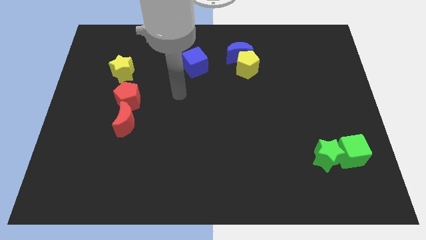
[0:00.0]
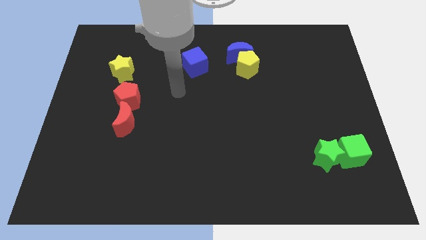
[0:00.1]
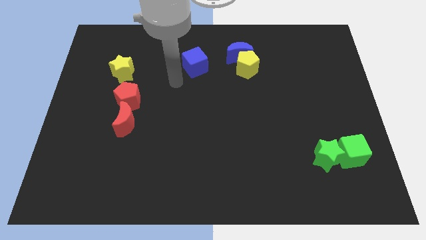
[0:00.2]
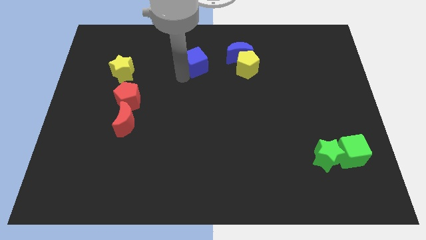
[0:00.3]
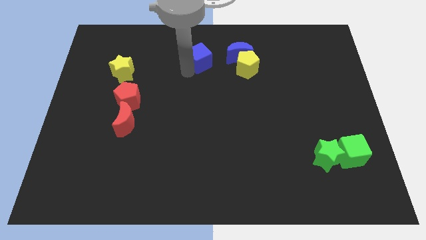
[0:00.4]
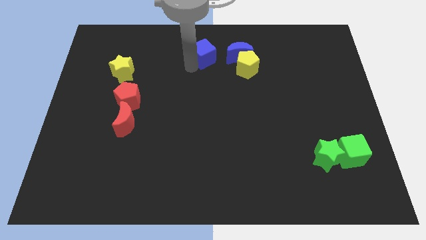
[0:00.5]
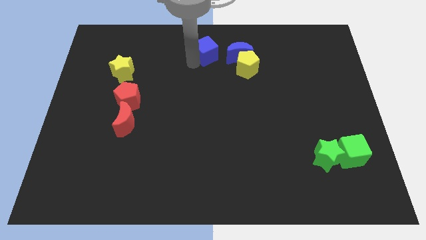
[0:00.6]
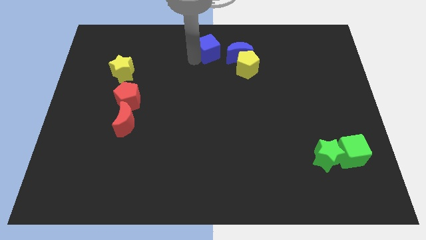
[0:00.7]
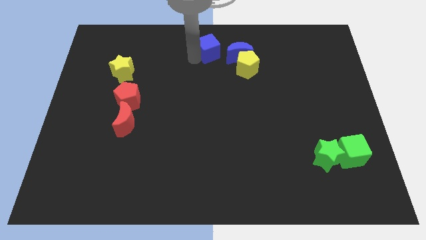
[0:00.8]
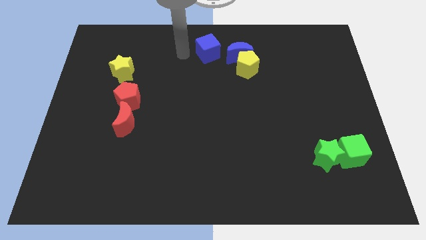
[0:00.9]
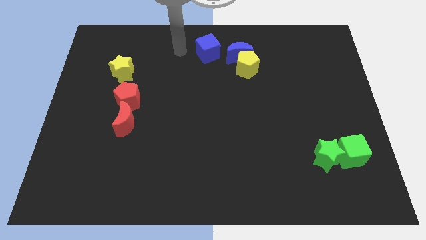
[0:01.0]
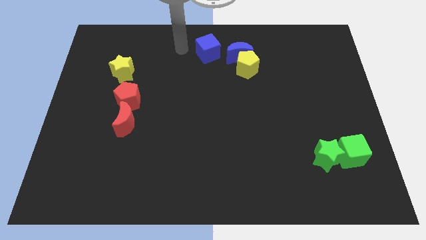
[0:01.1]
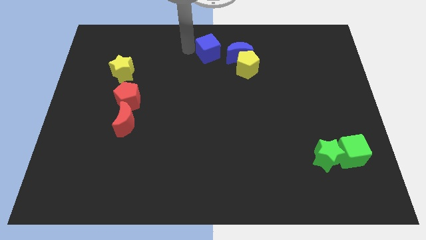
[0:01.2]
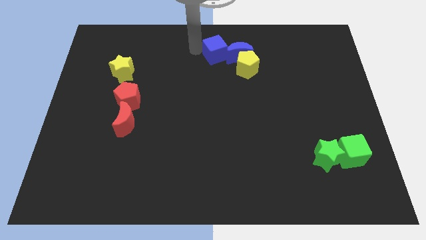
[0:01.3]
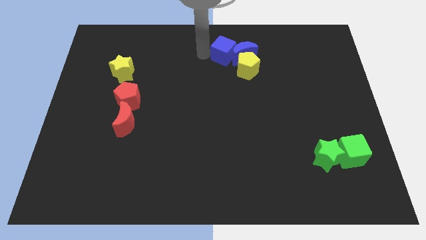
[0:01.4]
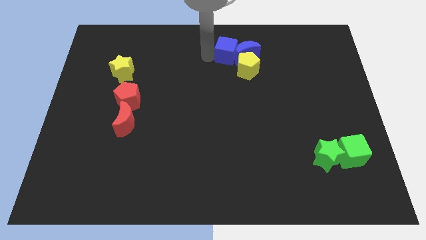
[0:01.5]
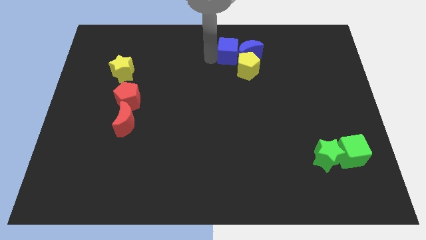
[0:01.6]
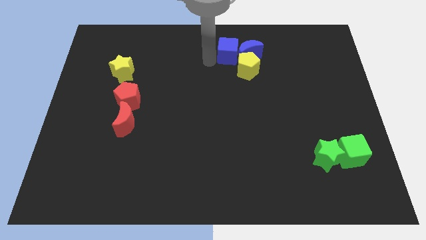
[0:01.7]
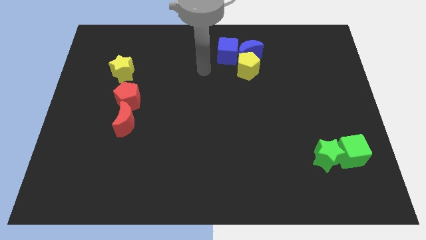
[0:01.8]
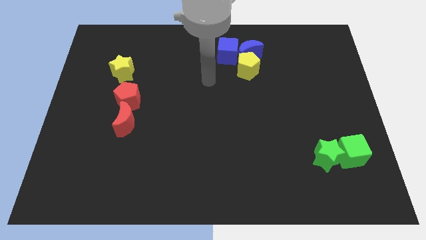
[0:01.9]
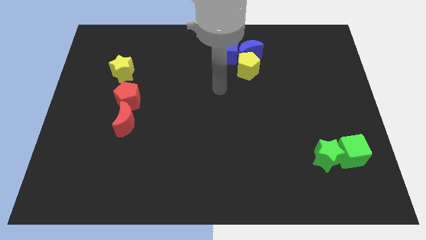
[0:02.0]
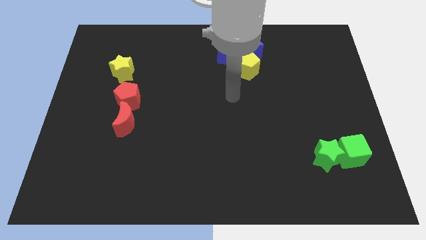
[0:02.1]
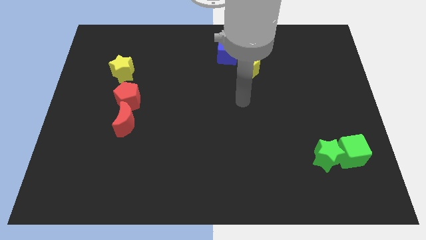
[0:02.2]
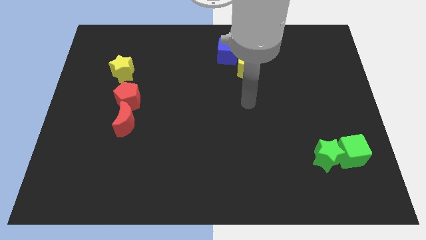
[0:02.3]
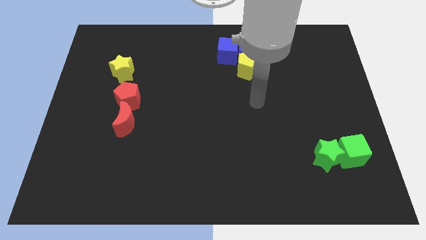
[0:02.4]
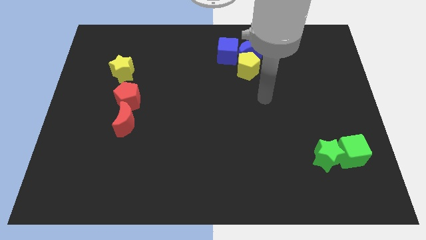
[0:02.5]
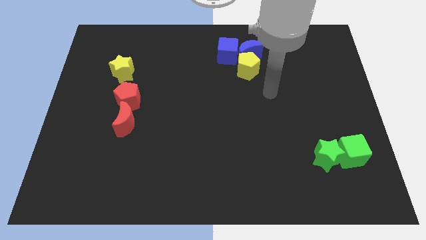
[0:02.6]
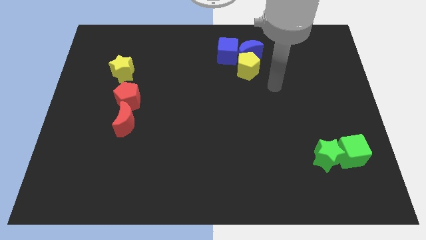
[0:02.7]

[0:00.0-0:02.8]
push the blue cube into the blue crescent

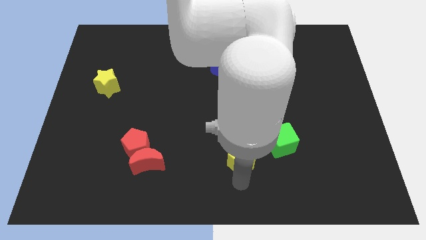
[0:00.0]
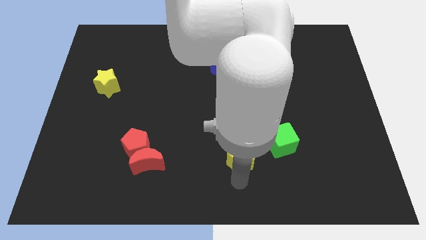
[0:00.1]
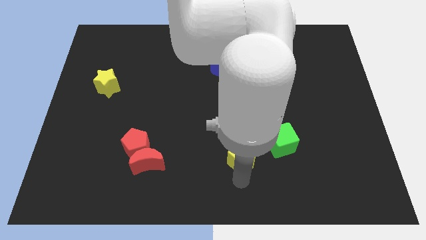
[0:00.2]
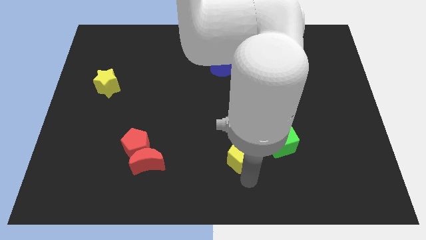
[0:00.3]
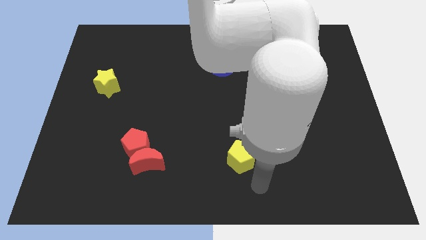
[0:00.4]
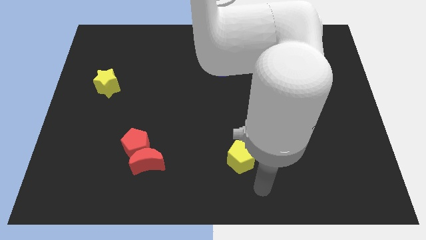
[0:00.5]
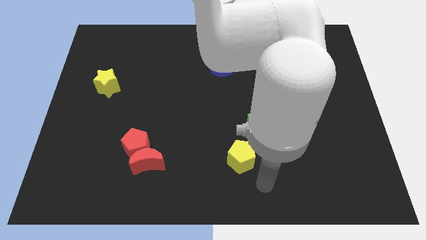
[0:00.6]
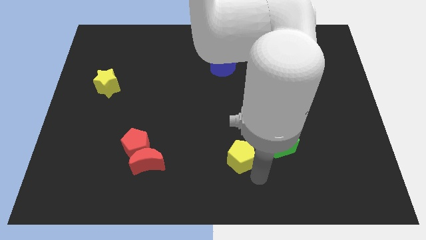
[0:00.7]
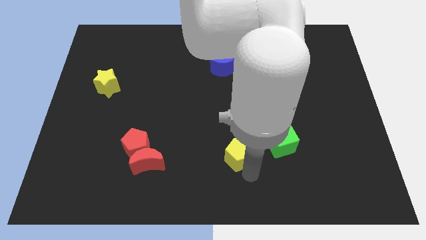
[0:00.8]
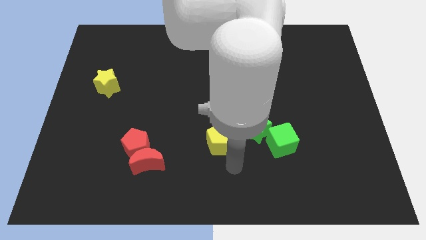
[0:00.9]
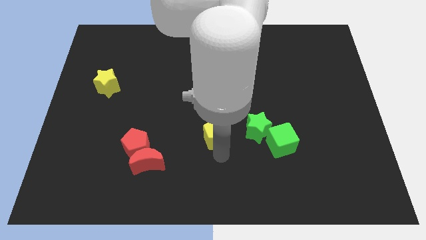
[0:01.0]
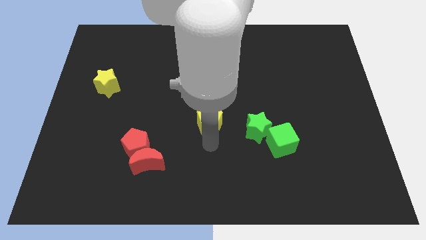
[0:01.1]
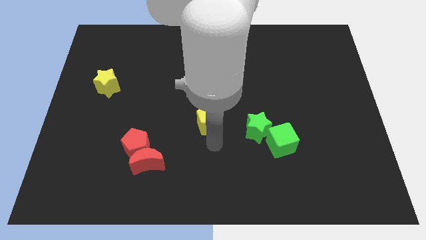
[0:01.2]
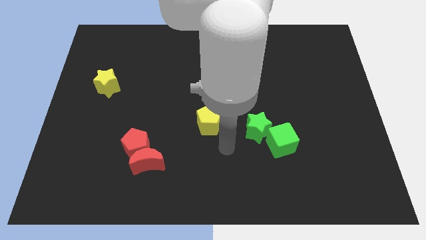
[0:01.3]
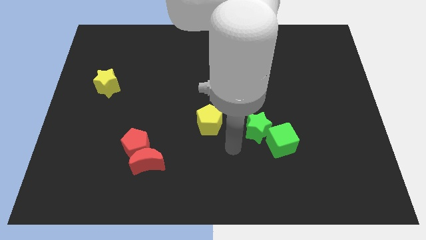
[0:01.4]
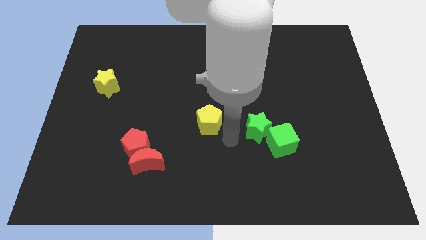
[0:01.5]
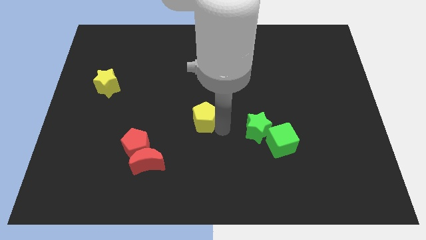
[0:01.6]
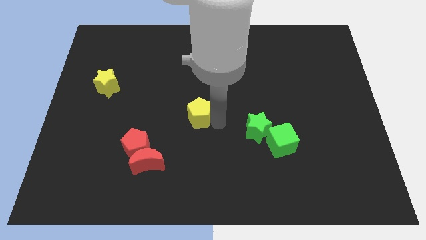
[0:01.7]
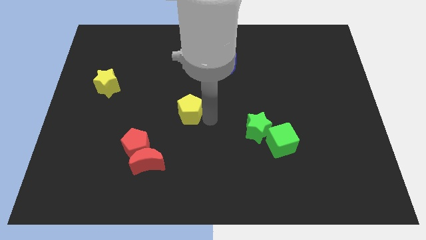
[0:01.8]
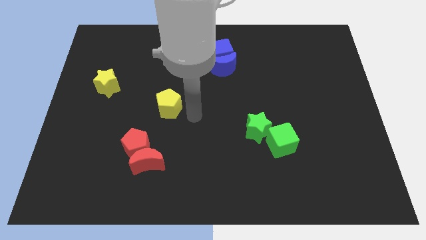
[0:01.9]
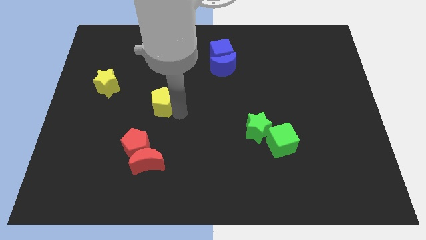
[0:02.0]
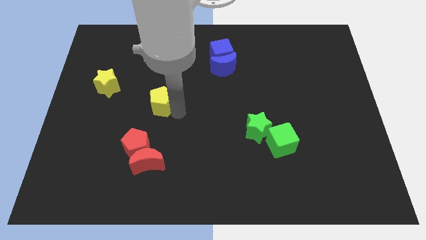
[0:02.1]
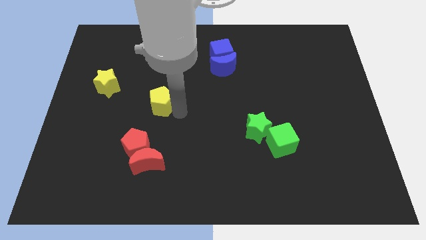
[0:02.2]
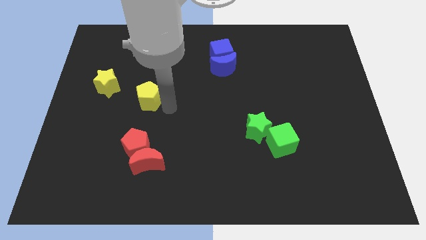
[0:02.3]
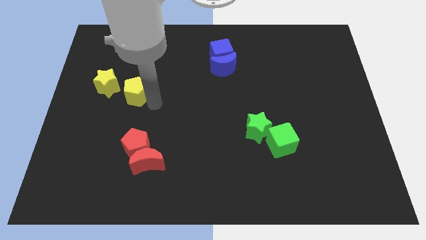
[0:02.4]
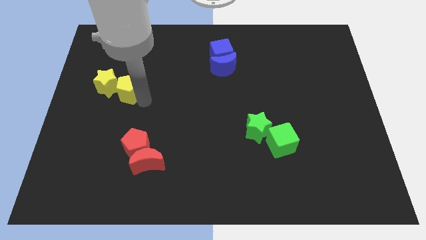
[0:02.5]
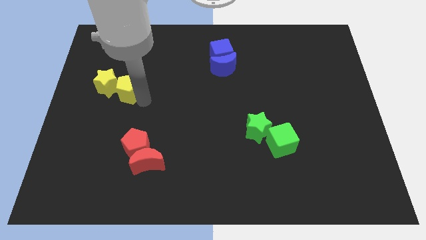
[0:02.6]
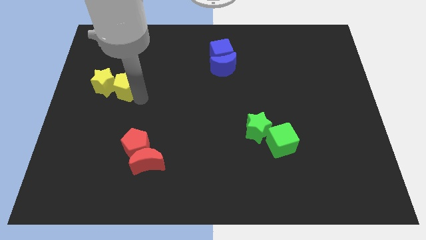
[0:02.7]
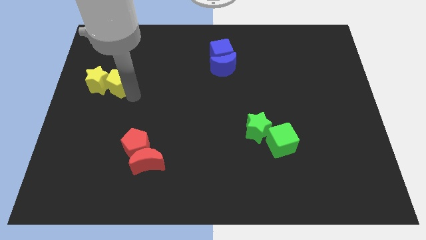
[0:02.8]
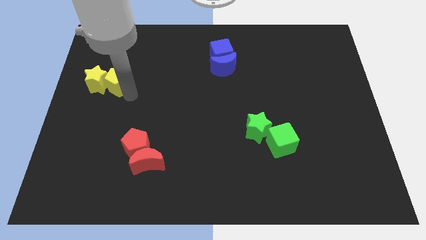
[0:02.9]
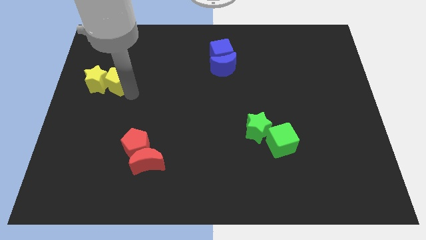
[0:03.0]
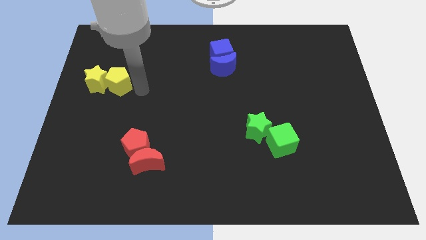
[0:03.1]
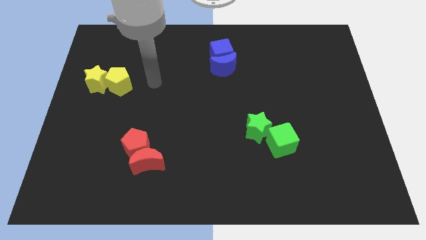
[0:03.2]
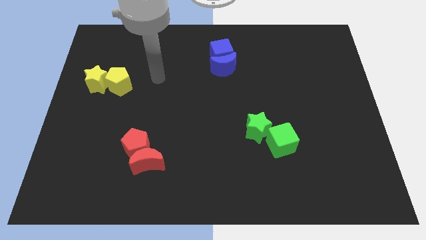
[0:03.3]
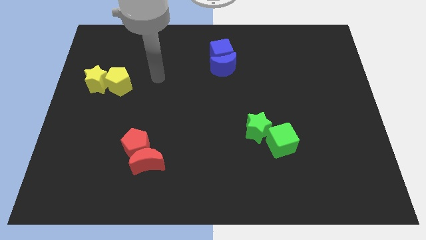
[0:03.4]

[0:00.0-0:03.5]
move the yellow pentagon into the yellow star

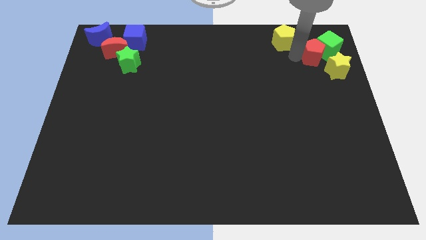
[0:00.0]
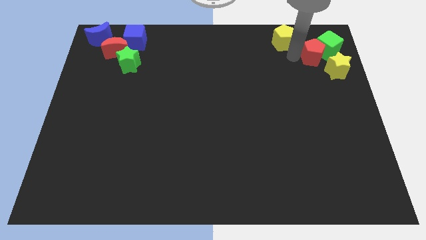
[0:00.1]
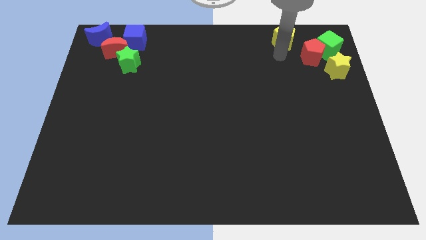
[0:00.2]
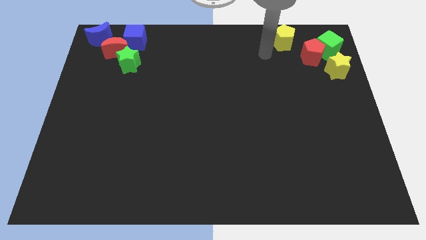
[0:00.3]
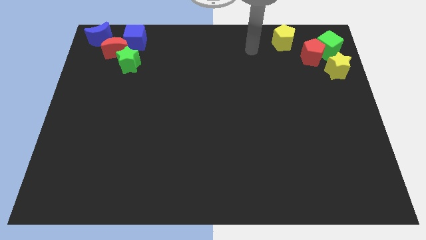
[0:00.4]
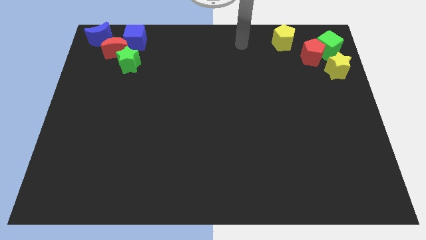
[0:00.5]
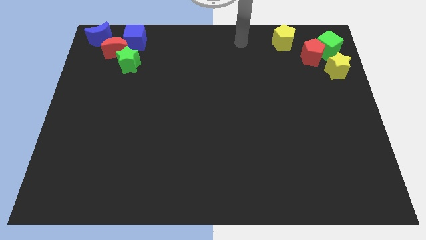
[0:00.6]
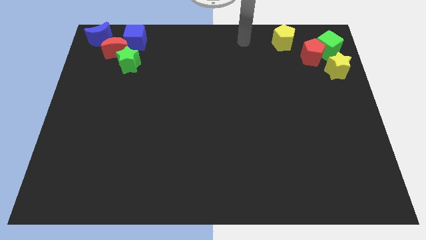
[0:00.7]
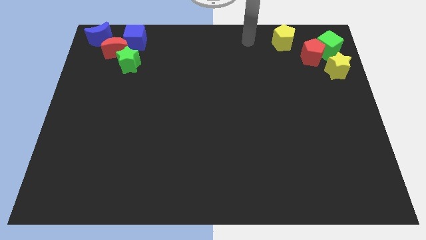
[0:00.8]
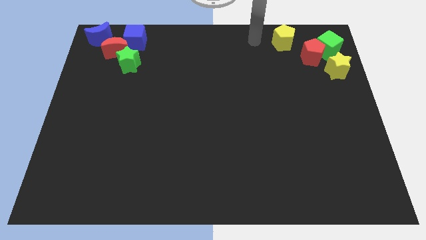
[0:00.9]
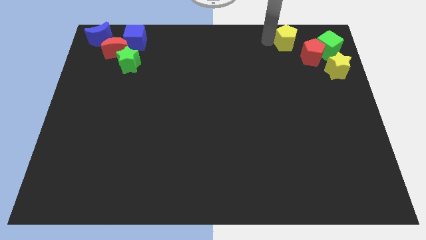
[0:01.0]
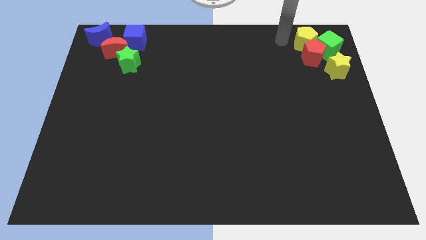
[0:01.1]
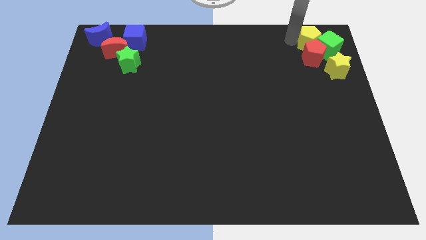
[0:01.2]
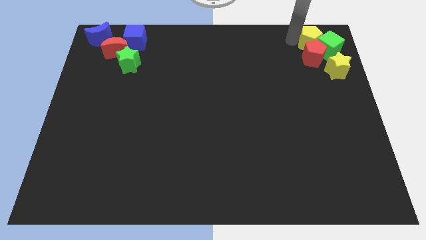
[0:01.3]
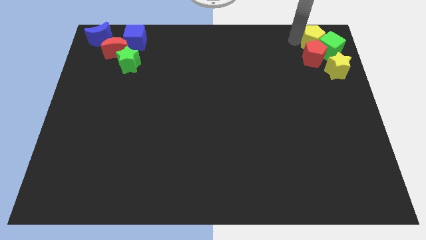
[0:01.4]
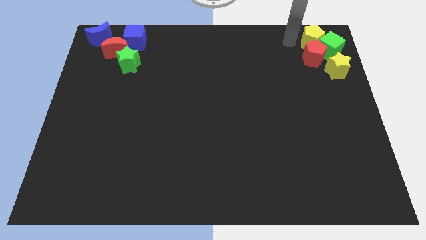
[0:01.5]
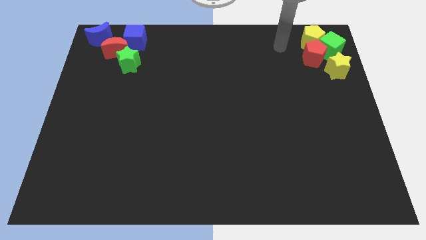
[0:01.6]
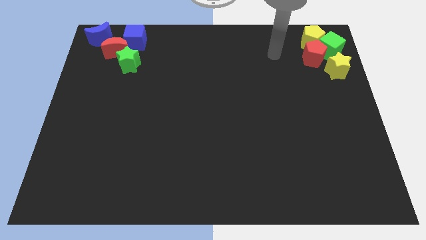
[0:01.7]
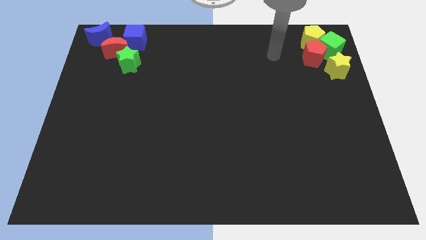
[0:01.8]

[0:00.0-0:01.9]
push the yellow pentagon into group of blocks

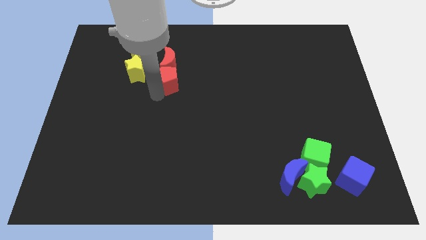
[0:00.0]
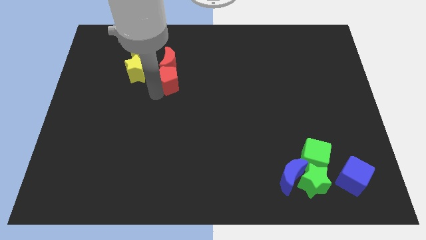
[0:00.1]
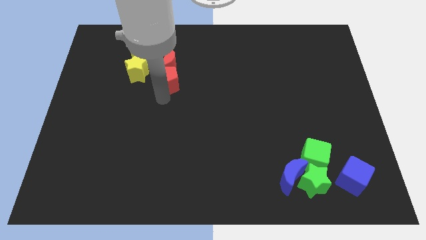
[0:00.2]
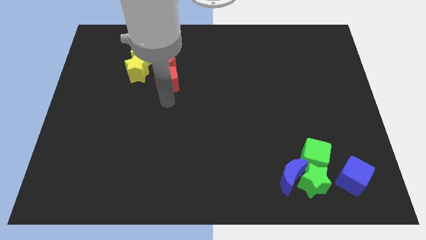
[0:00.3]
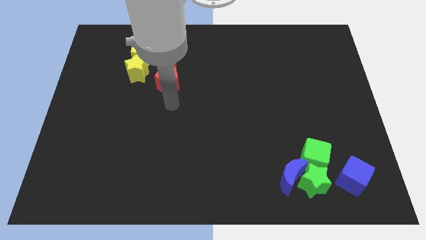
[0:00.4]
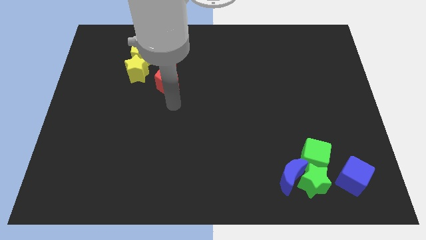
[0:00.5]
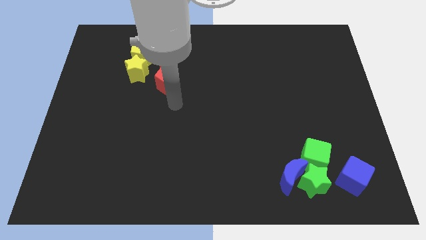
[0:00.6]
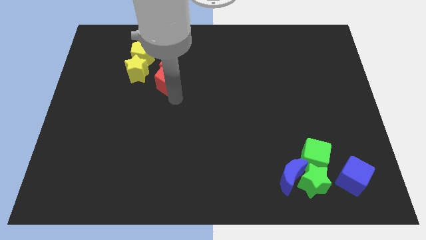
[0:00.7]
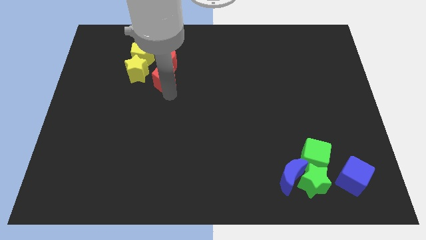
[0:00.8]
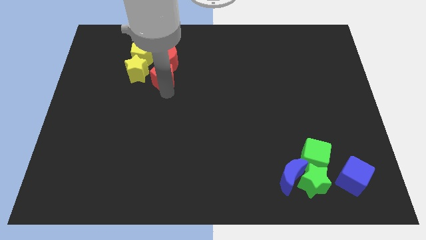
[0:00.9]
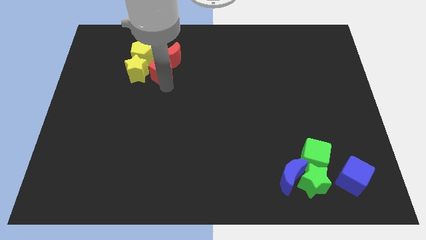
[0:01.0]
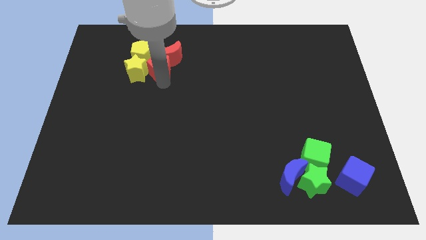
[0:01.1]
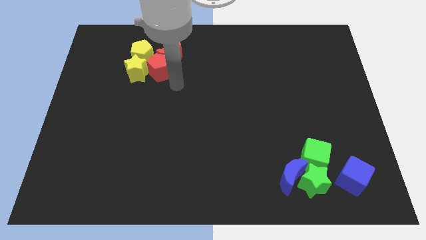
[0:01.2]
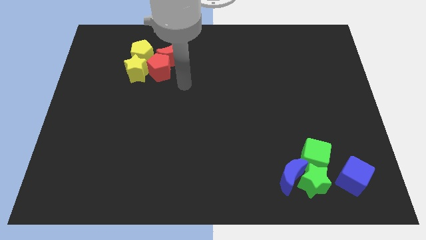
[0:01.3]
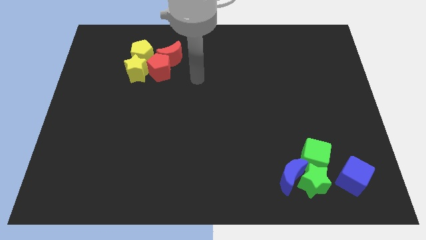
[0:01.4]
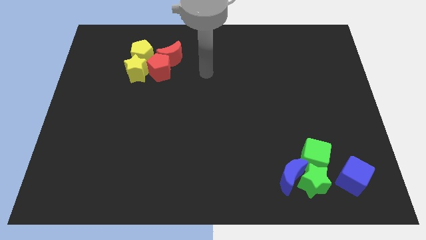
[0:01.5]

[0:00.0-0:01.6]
move the red pentagon along with the red crescent close to the yellow star and the yellow pentagon
